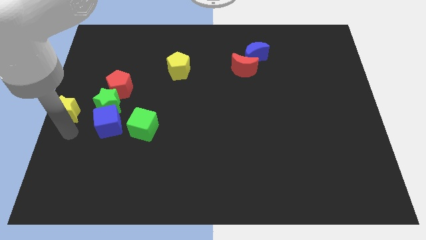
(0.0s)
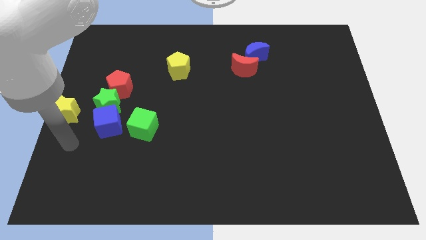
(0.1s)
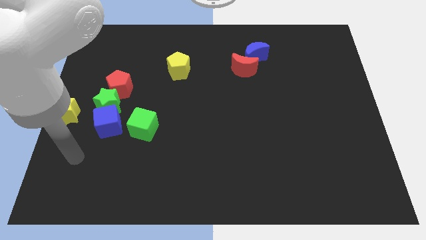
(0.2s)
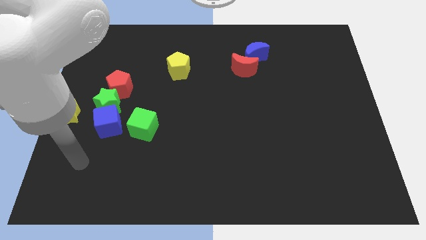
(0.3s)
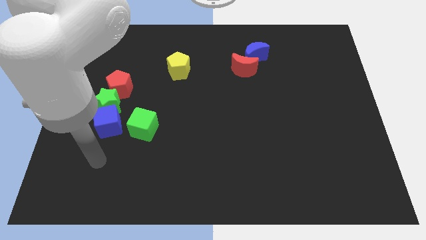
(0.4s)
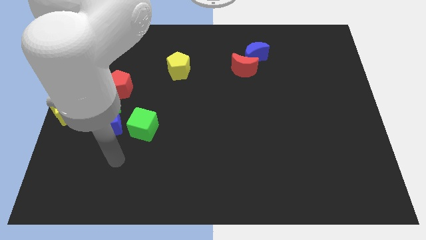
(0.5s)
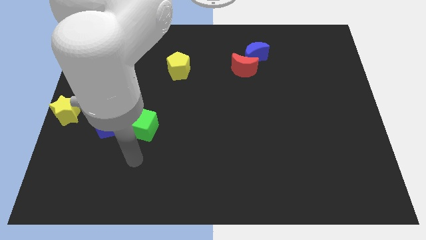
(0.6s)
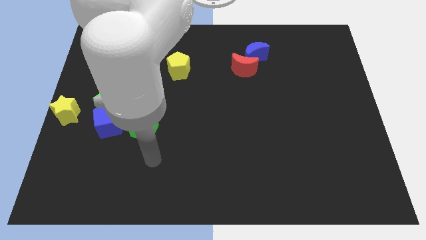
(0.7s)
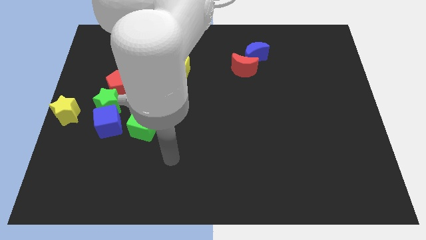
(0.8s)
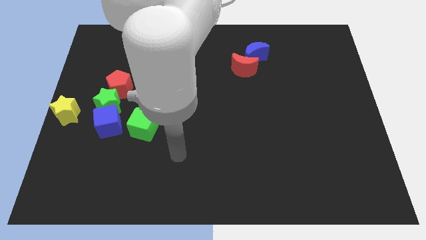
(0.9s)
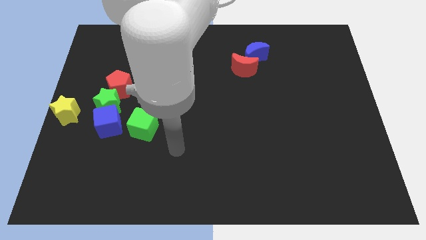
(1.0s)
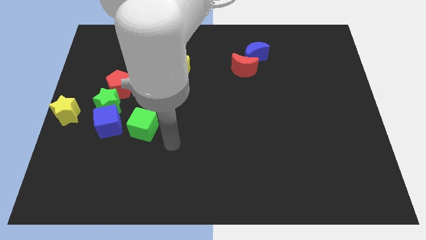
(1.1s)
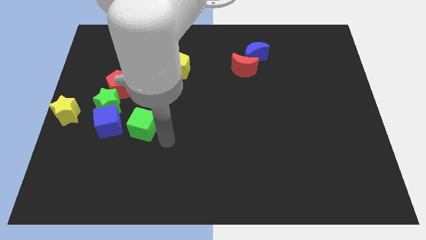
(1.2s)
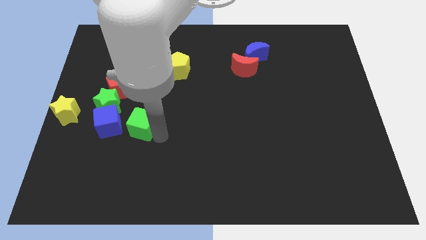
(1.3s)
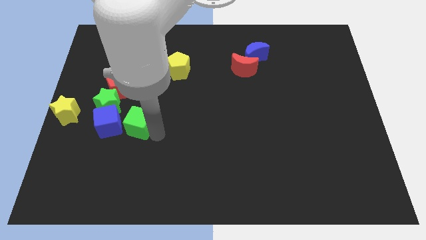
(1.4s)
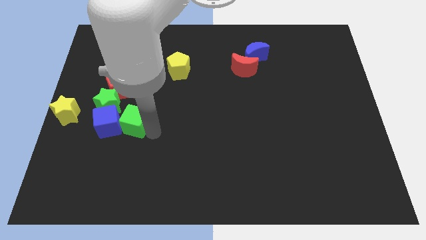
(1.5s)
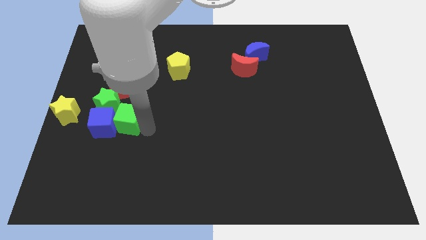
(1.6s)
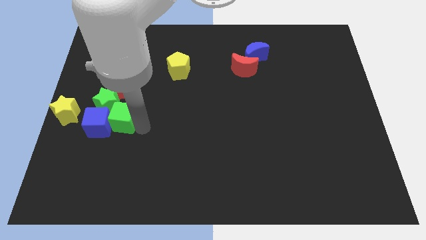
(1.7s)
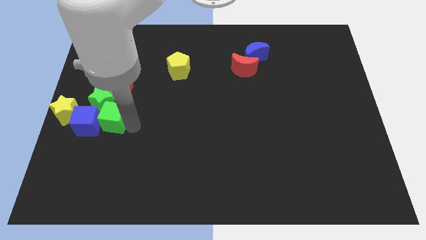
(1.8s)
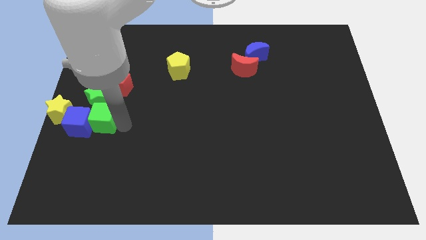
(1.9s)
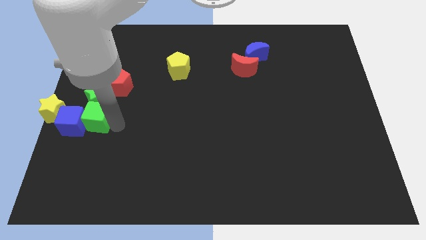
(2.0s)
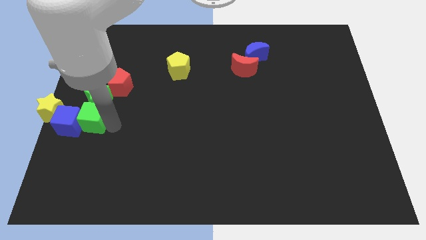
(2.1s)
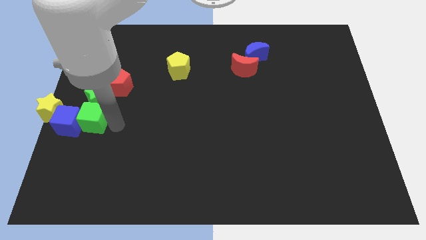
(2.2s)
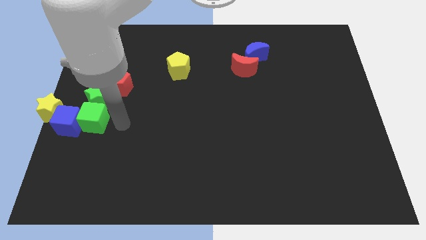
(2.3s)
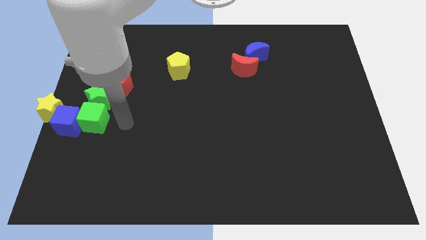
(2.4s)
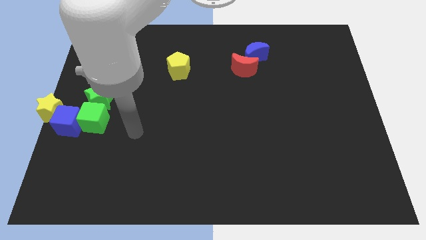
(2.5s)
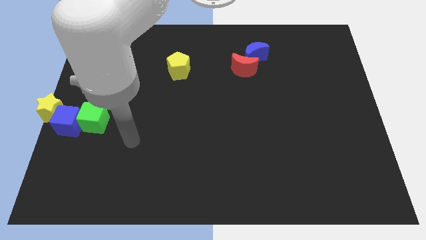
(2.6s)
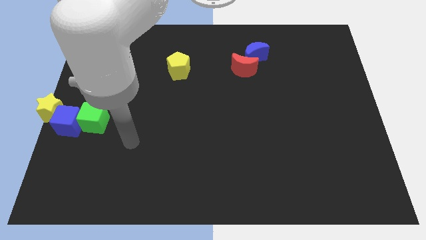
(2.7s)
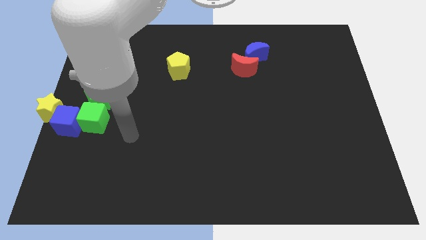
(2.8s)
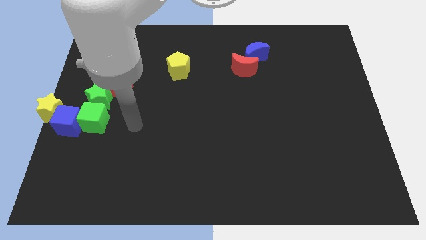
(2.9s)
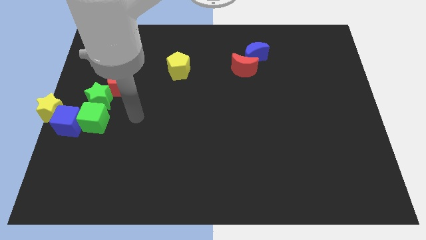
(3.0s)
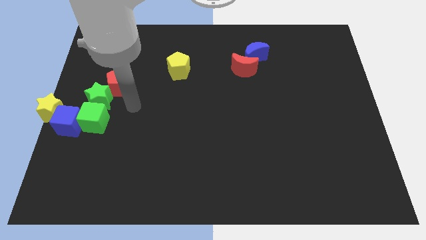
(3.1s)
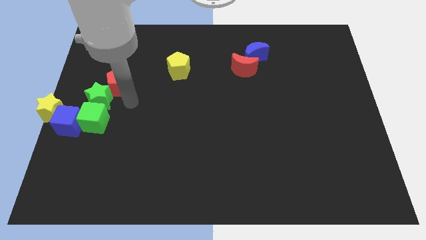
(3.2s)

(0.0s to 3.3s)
move the blue cube and green cube into the yellow star

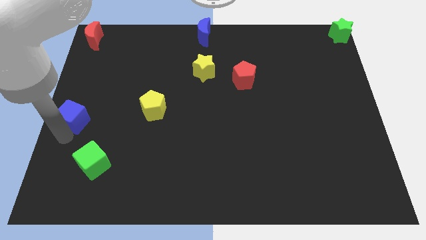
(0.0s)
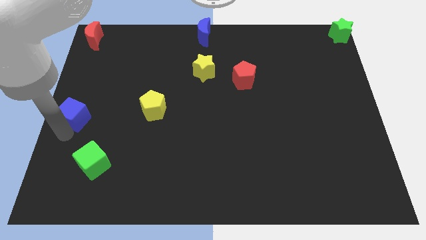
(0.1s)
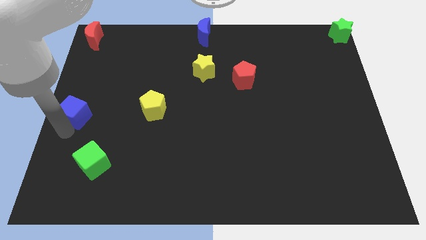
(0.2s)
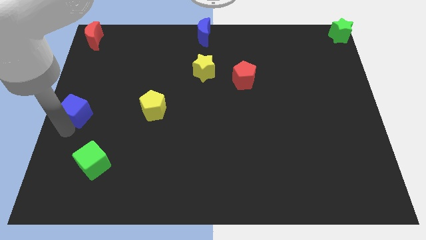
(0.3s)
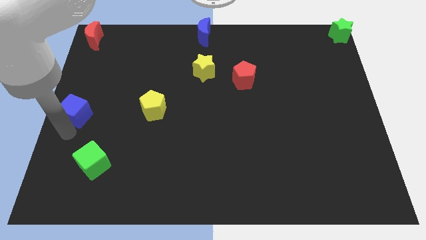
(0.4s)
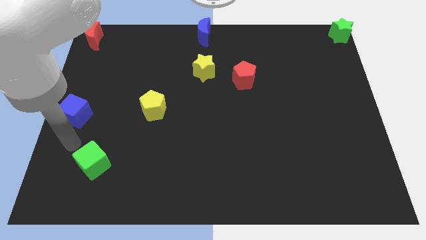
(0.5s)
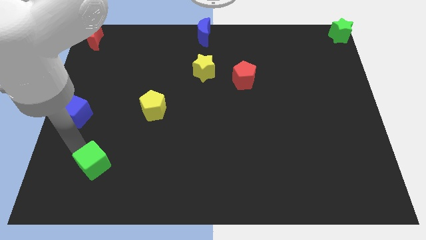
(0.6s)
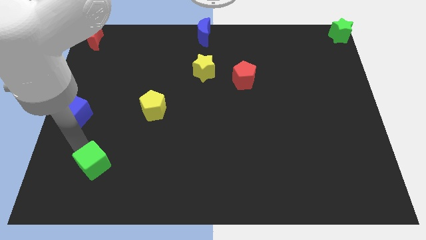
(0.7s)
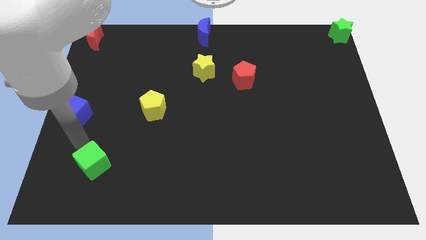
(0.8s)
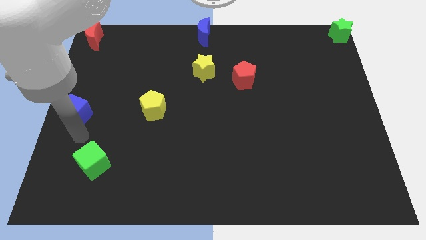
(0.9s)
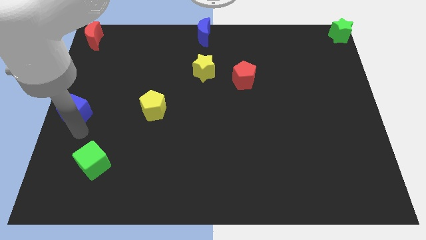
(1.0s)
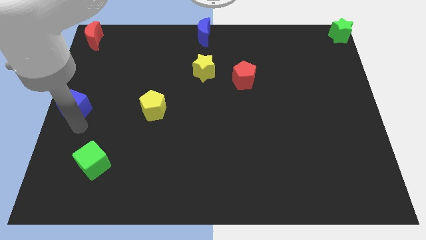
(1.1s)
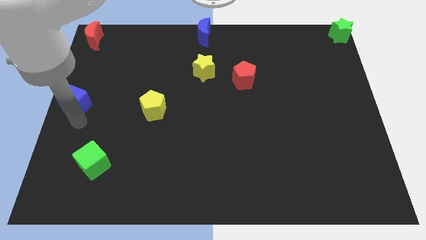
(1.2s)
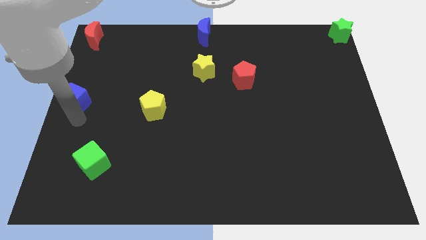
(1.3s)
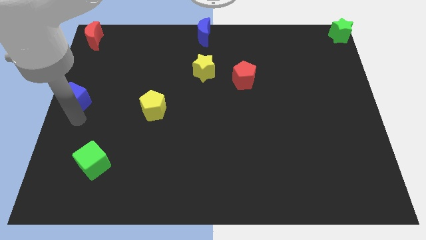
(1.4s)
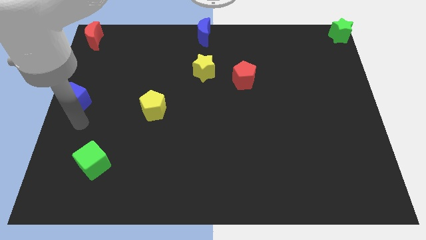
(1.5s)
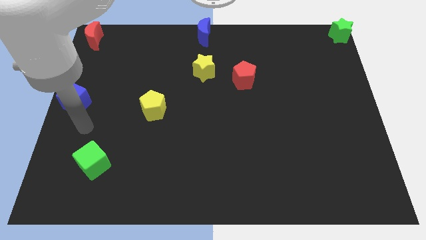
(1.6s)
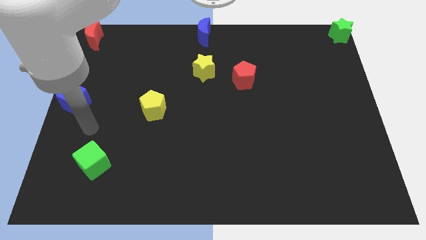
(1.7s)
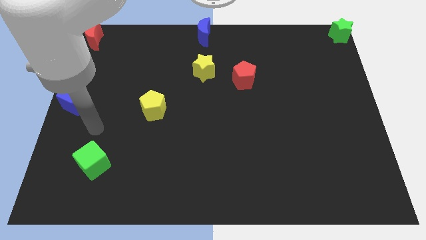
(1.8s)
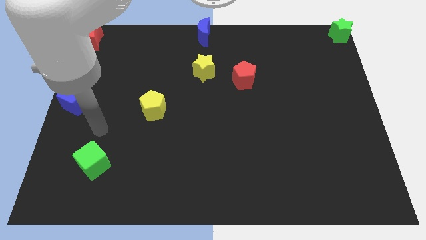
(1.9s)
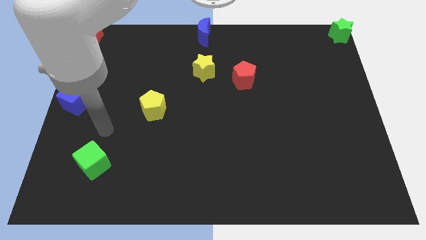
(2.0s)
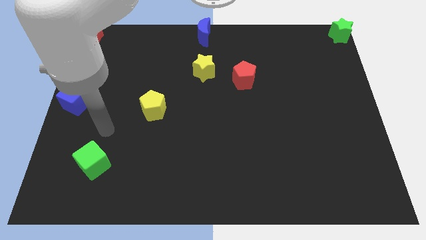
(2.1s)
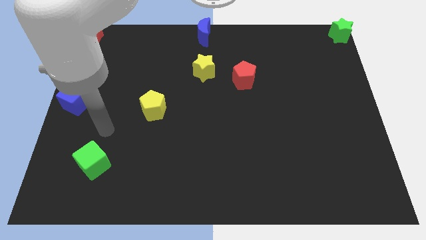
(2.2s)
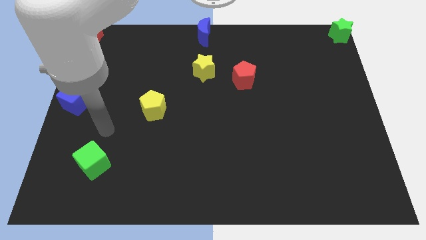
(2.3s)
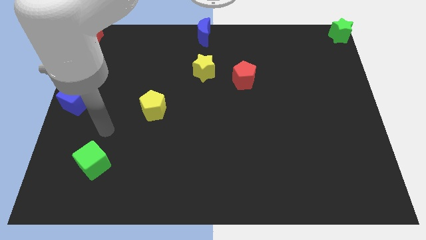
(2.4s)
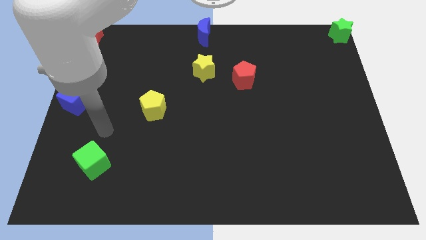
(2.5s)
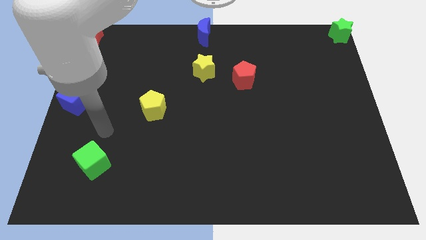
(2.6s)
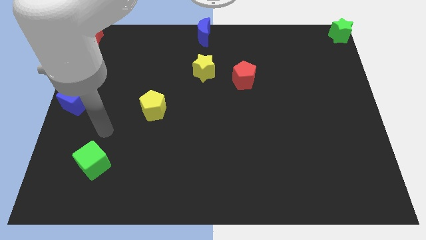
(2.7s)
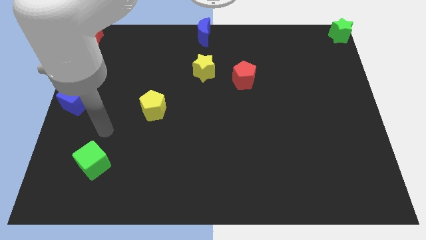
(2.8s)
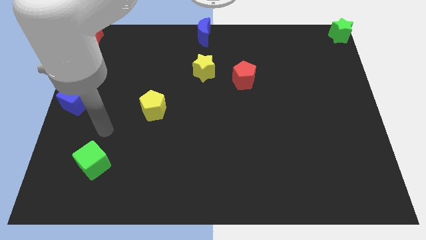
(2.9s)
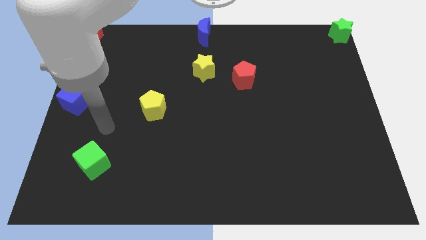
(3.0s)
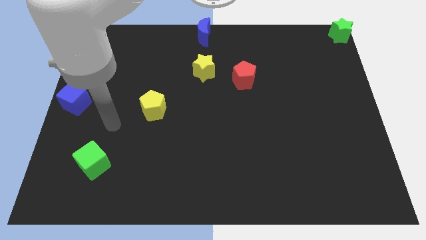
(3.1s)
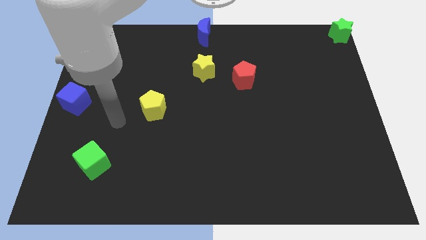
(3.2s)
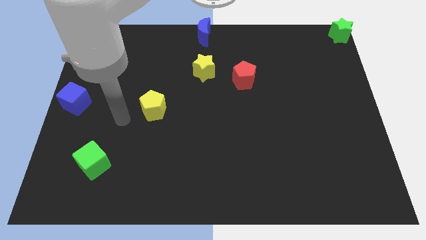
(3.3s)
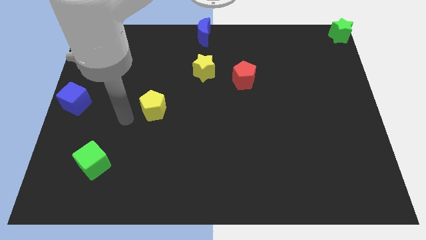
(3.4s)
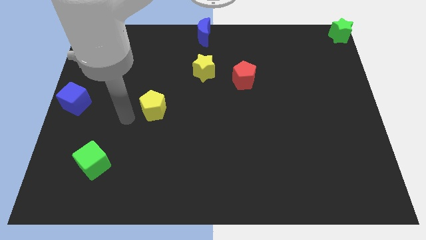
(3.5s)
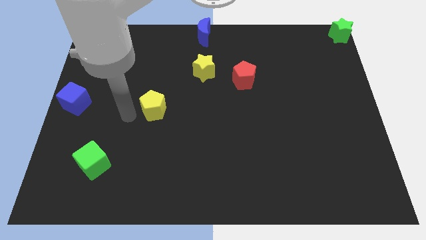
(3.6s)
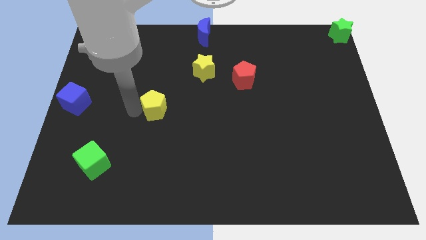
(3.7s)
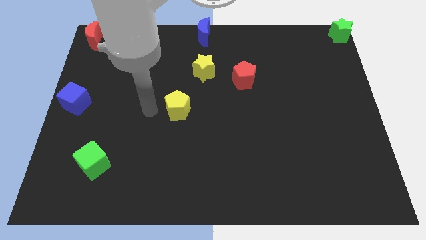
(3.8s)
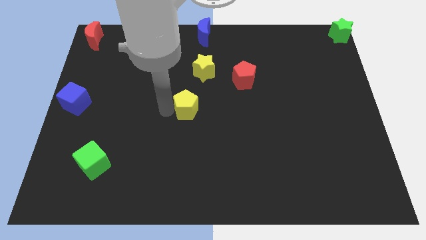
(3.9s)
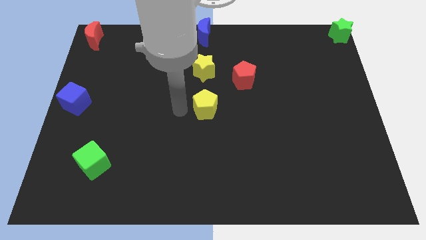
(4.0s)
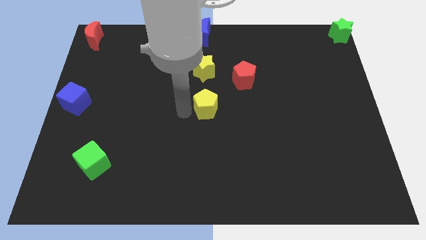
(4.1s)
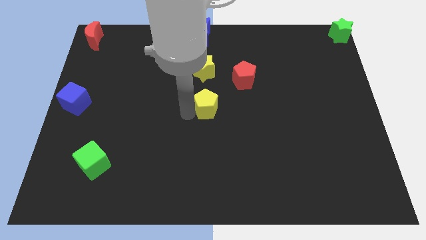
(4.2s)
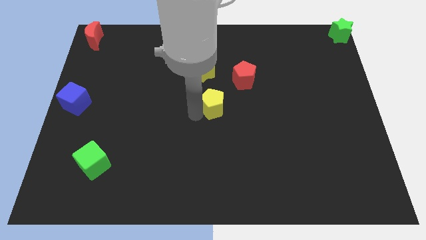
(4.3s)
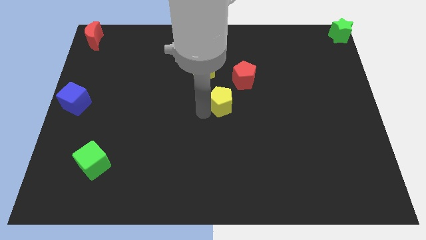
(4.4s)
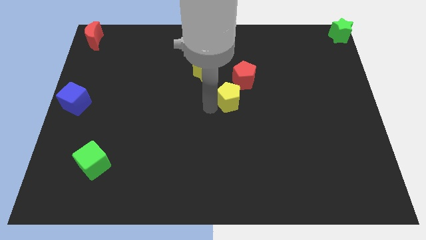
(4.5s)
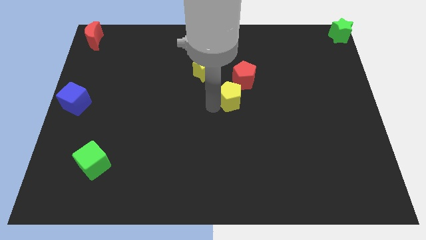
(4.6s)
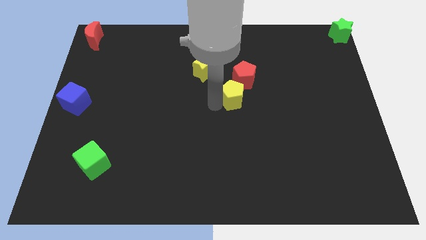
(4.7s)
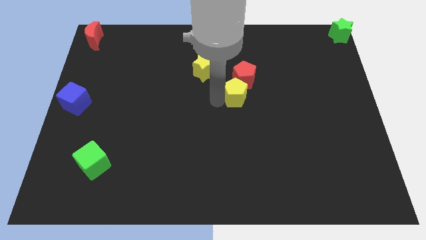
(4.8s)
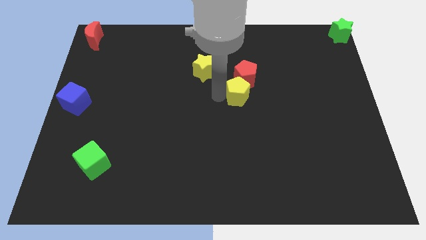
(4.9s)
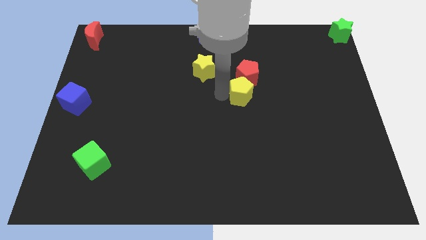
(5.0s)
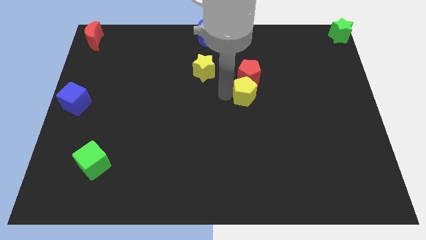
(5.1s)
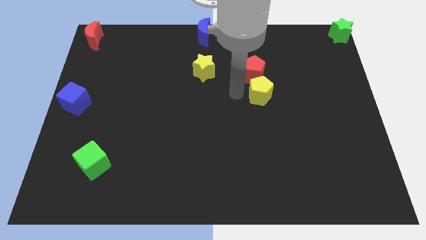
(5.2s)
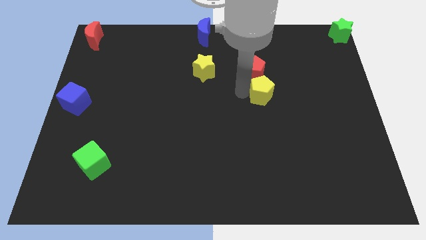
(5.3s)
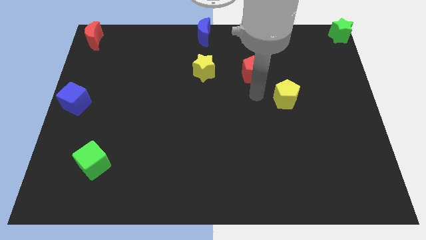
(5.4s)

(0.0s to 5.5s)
push the yellow pentagon into the red pentagon

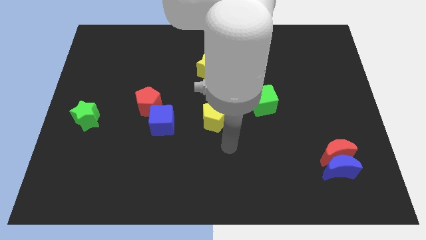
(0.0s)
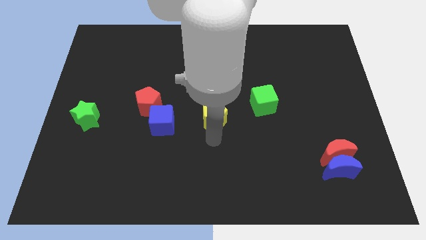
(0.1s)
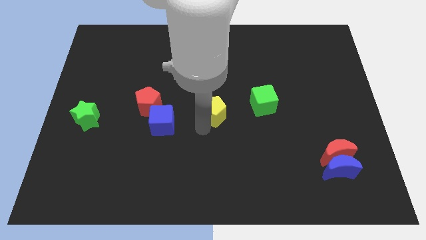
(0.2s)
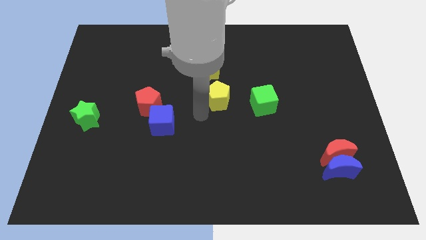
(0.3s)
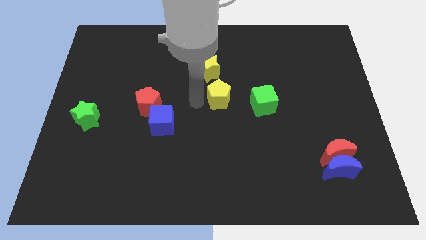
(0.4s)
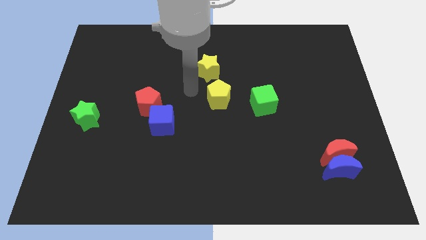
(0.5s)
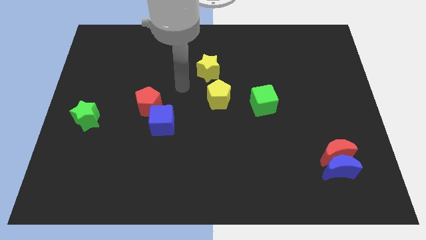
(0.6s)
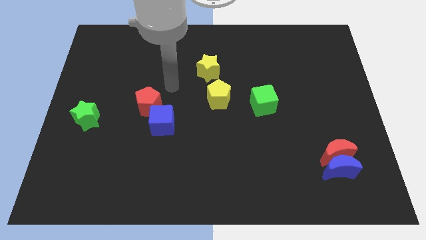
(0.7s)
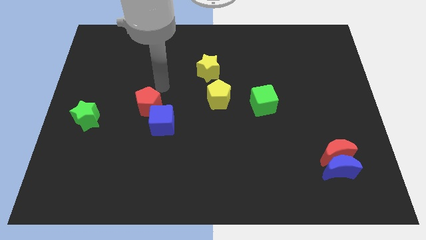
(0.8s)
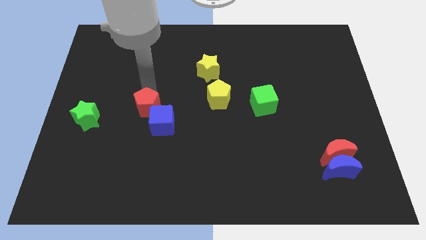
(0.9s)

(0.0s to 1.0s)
move your arm towards the red pentagon
